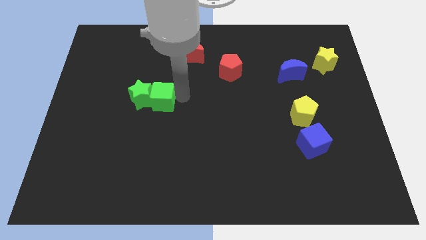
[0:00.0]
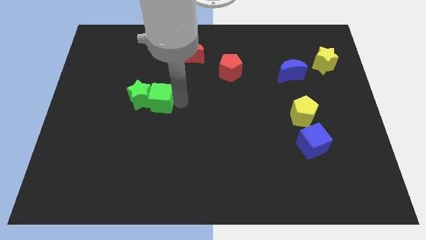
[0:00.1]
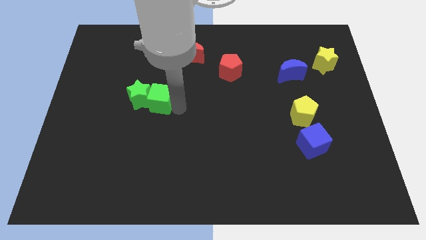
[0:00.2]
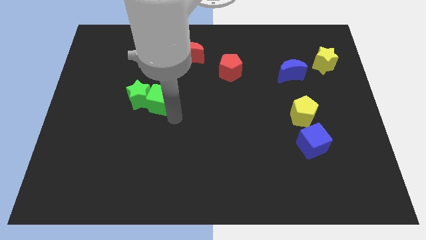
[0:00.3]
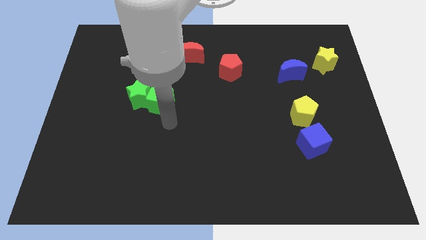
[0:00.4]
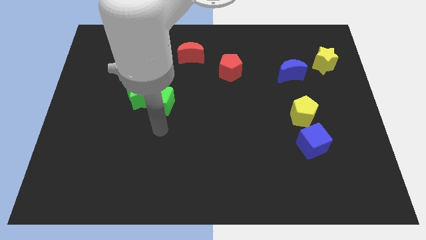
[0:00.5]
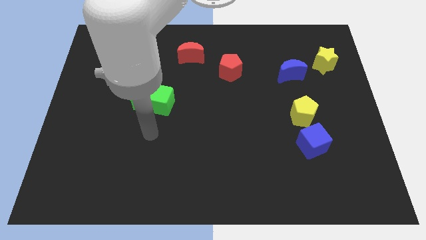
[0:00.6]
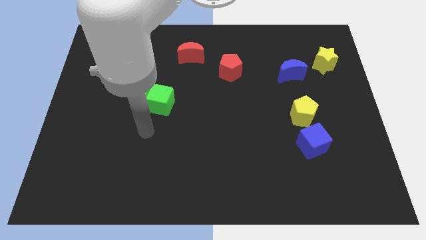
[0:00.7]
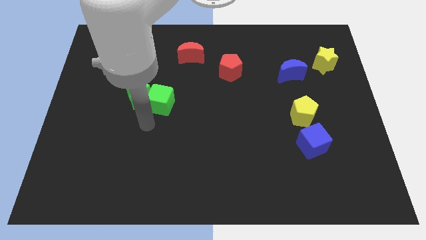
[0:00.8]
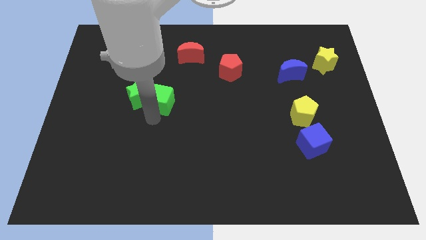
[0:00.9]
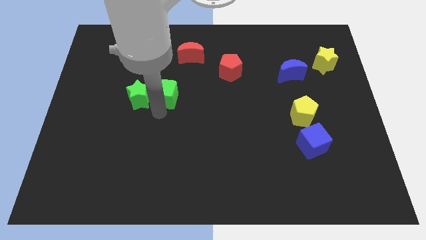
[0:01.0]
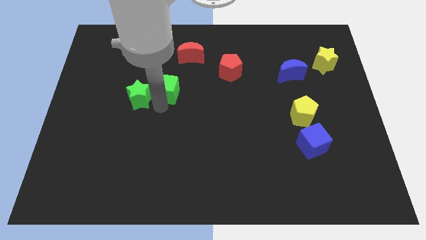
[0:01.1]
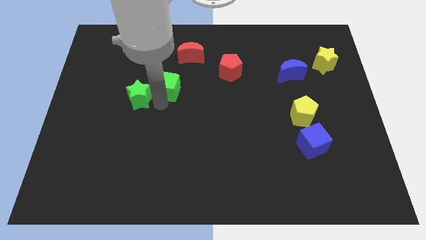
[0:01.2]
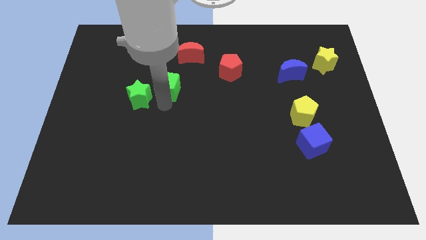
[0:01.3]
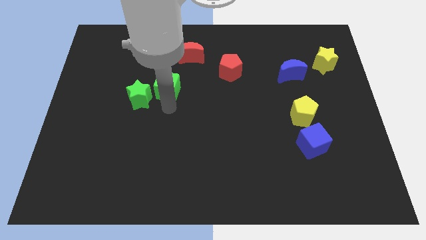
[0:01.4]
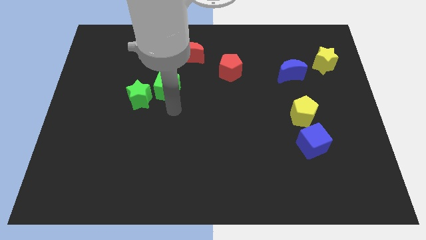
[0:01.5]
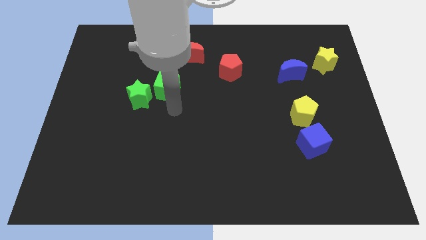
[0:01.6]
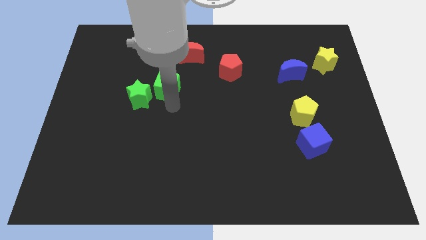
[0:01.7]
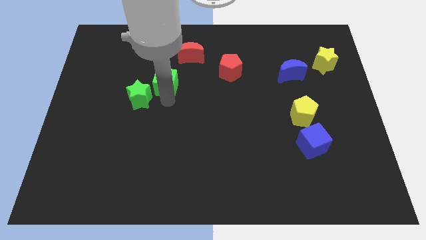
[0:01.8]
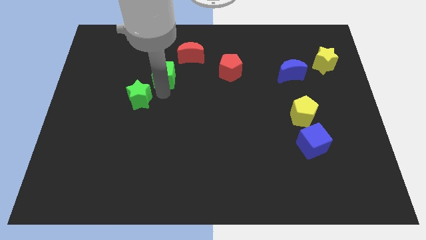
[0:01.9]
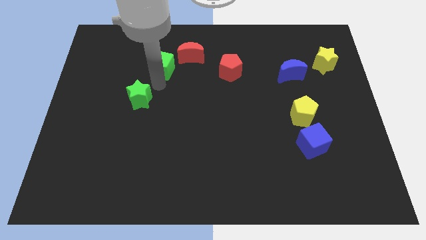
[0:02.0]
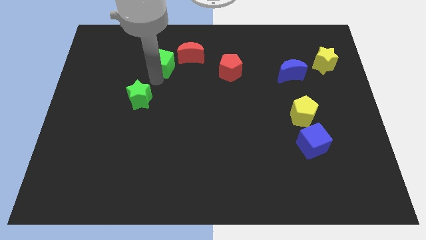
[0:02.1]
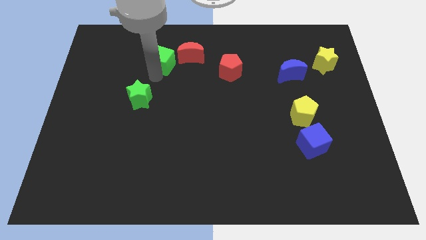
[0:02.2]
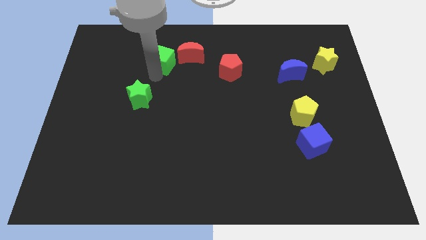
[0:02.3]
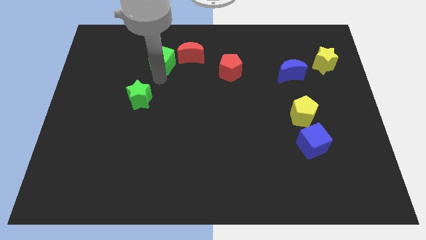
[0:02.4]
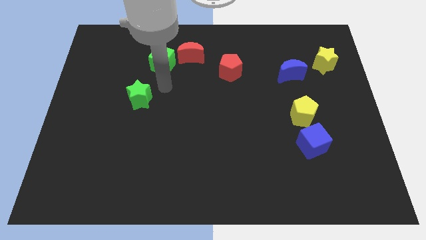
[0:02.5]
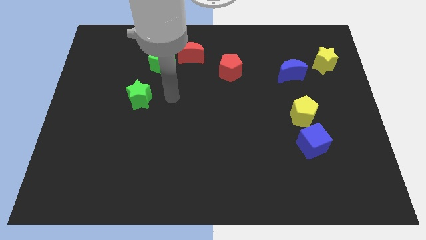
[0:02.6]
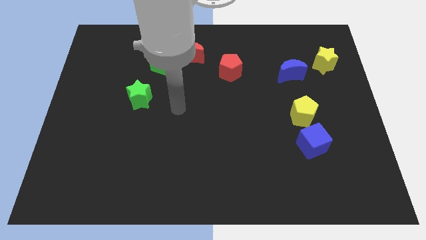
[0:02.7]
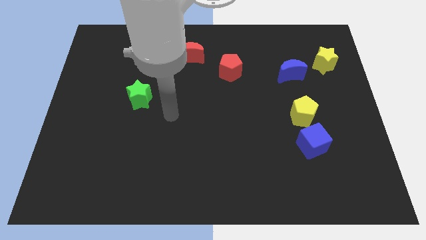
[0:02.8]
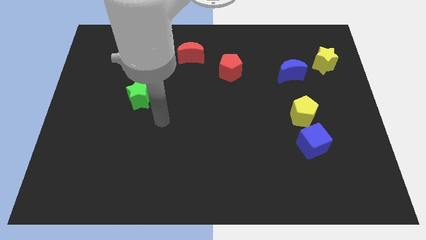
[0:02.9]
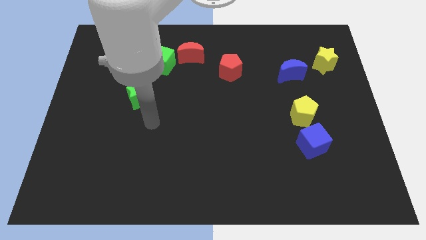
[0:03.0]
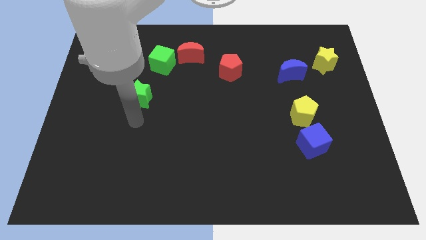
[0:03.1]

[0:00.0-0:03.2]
move green cube to the left of red moon

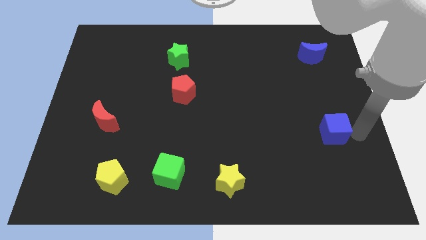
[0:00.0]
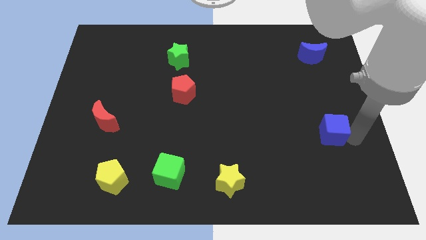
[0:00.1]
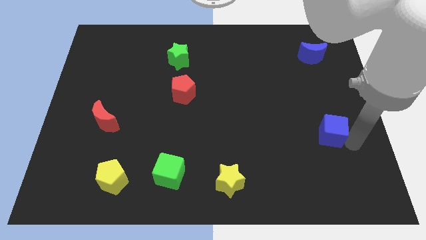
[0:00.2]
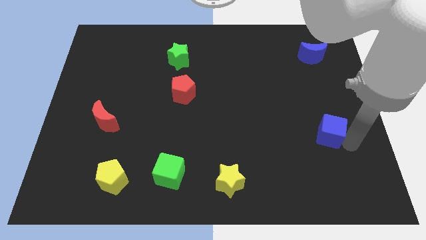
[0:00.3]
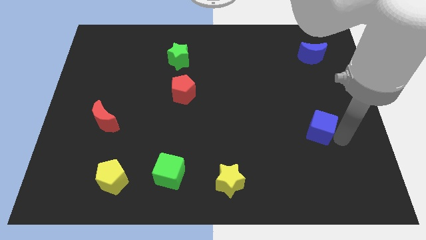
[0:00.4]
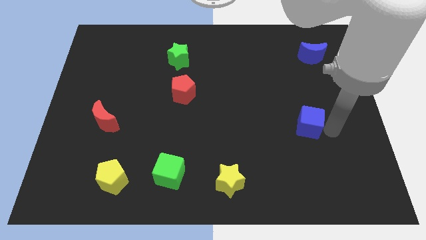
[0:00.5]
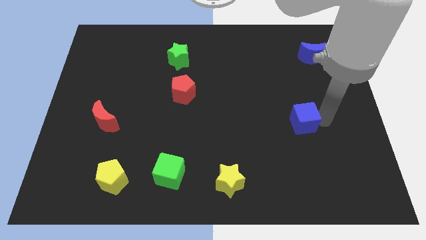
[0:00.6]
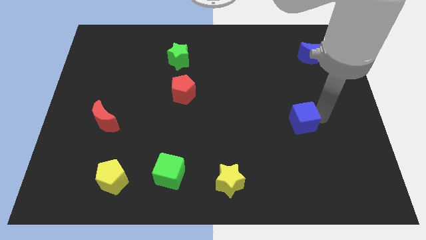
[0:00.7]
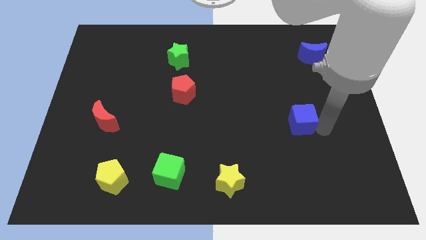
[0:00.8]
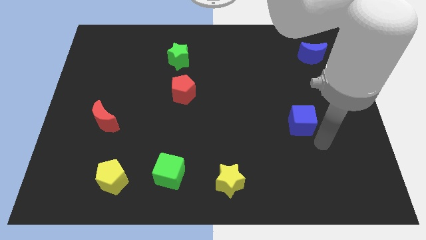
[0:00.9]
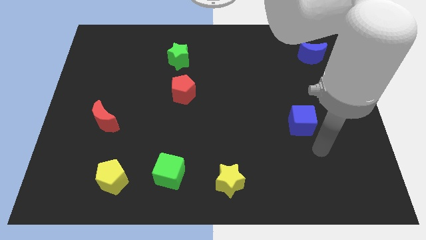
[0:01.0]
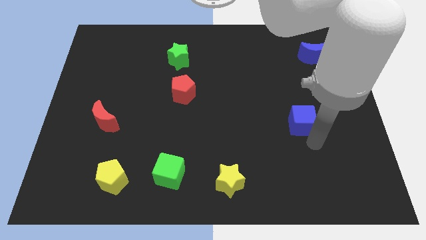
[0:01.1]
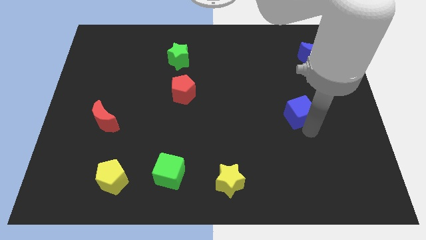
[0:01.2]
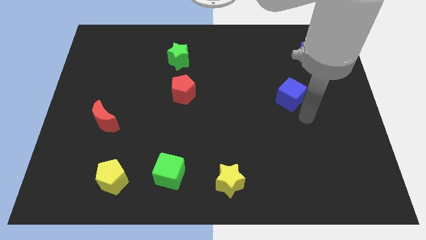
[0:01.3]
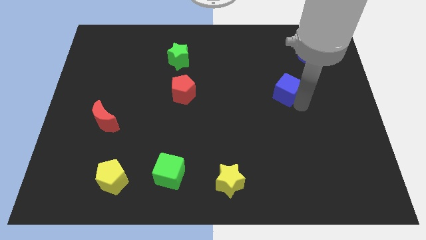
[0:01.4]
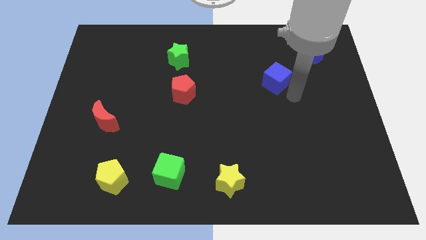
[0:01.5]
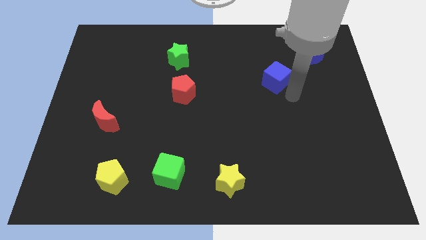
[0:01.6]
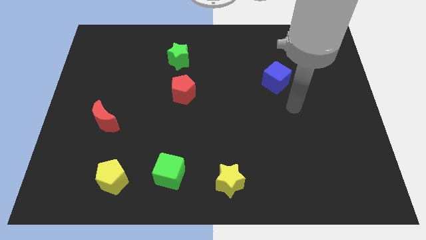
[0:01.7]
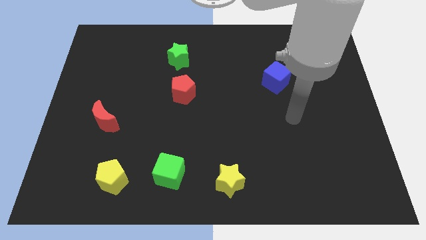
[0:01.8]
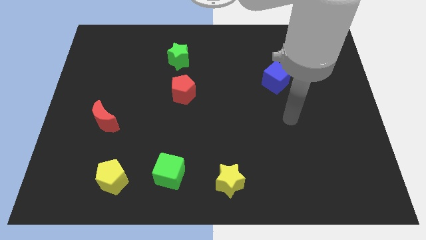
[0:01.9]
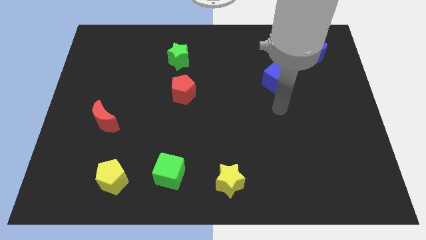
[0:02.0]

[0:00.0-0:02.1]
slide blue cube up diagonal to blue moon

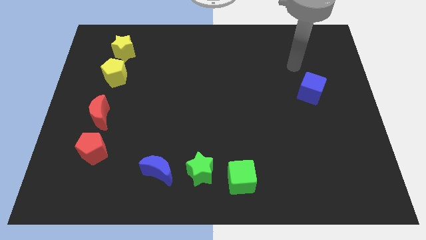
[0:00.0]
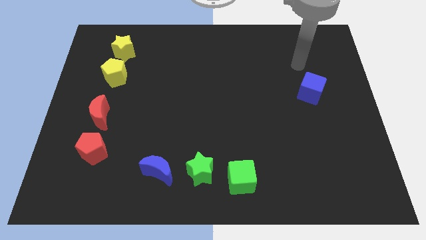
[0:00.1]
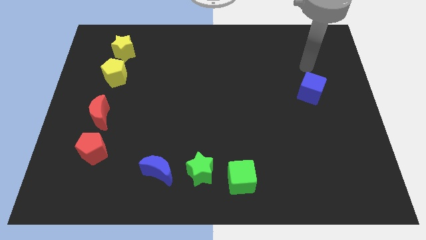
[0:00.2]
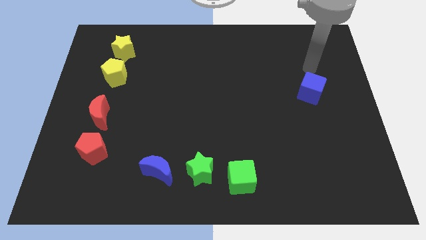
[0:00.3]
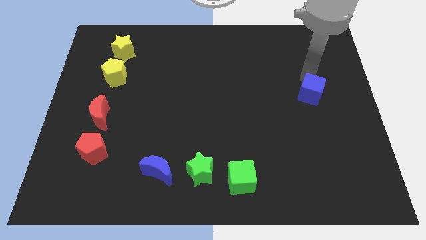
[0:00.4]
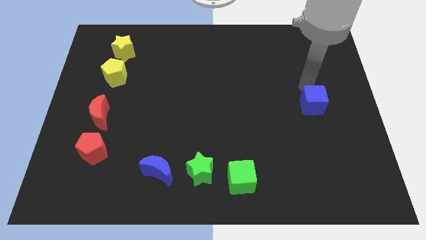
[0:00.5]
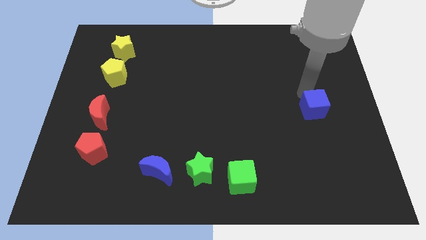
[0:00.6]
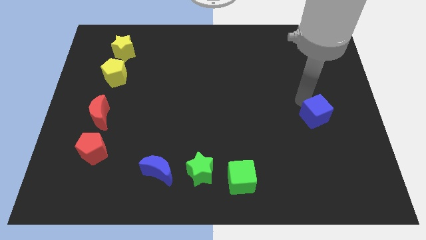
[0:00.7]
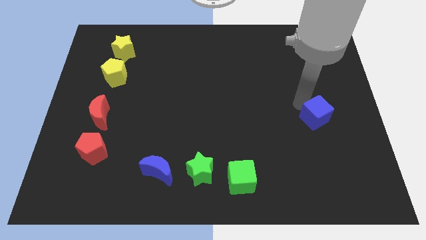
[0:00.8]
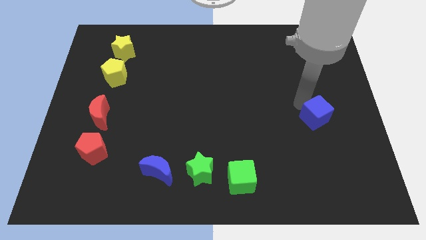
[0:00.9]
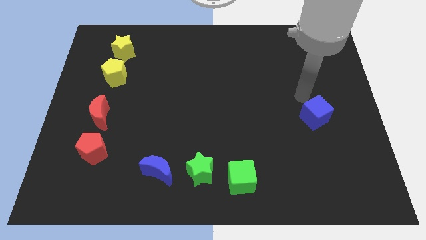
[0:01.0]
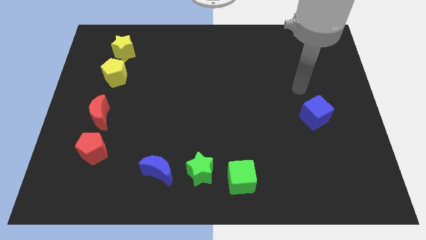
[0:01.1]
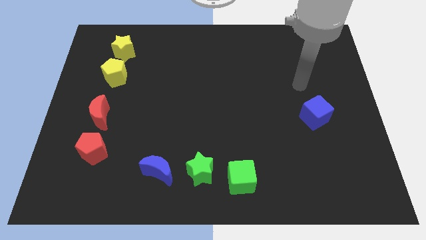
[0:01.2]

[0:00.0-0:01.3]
slightly push the blue cube downwards

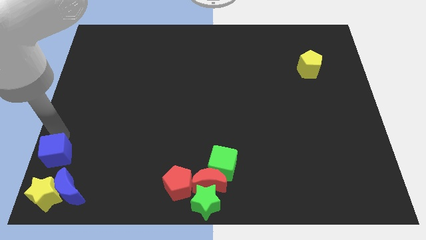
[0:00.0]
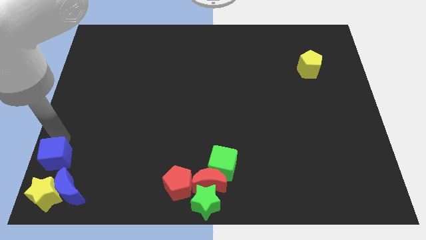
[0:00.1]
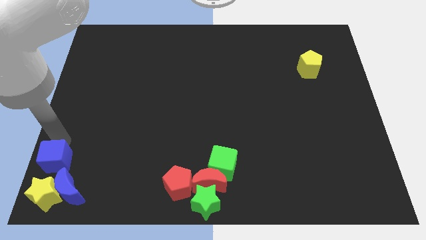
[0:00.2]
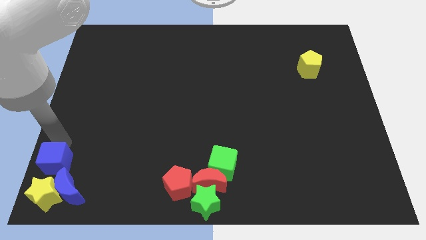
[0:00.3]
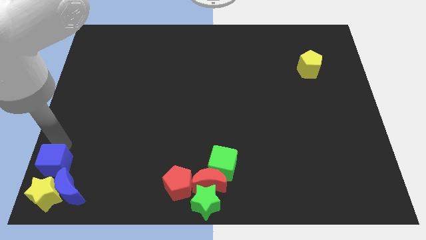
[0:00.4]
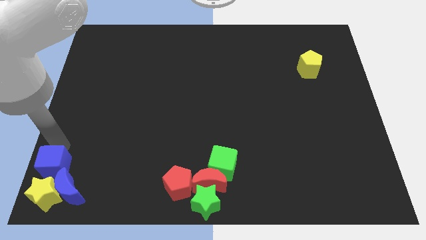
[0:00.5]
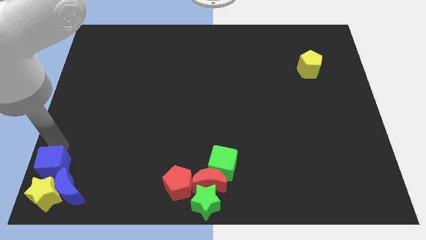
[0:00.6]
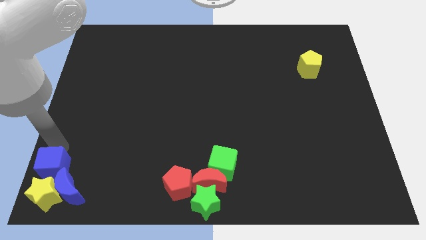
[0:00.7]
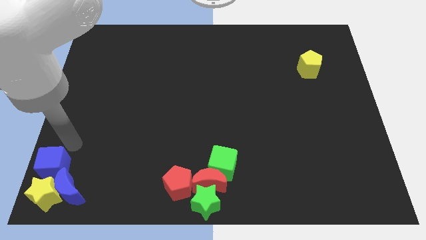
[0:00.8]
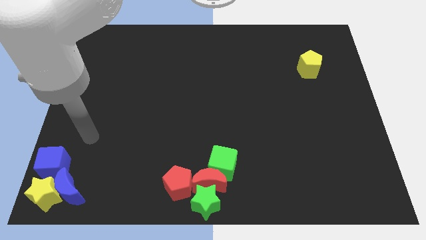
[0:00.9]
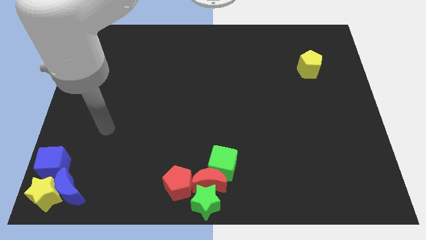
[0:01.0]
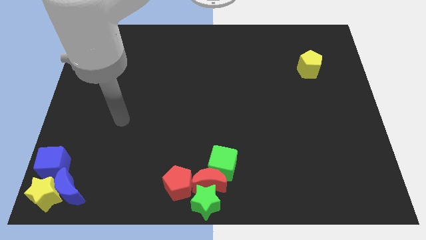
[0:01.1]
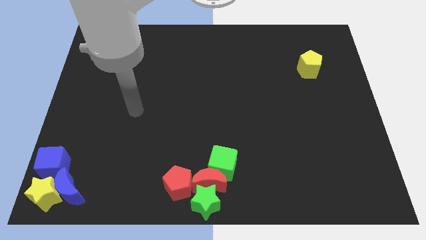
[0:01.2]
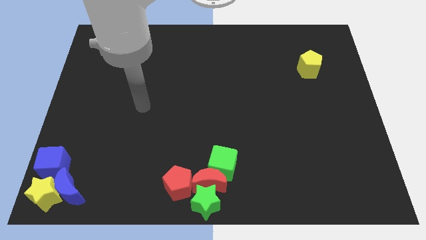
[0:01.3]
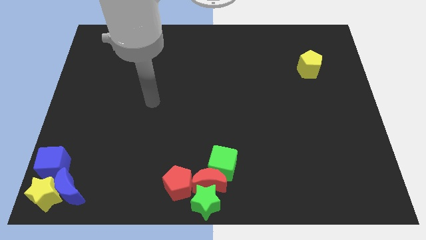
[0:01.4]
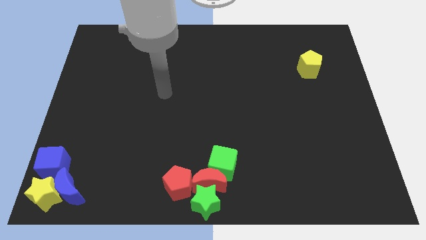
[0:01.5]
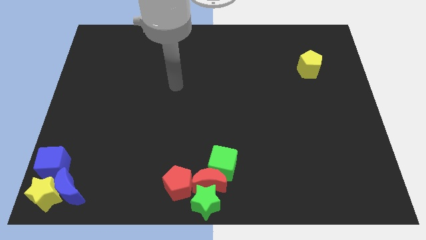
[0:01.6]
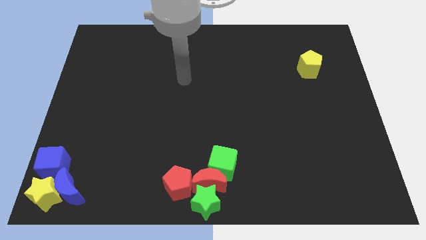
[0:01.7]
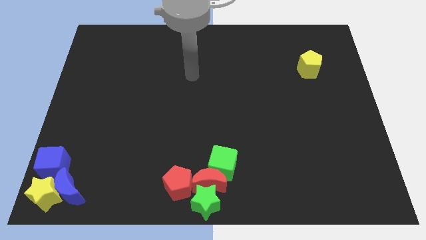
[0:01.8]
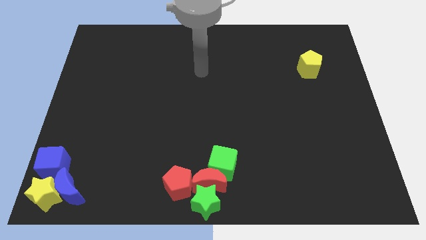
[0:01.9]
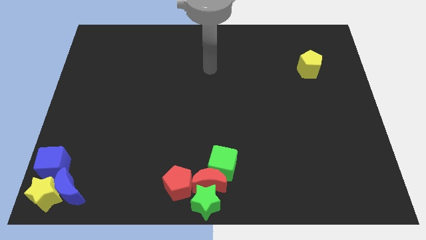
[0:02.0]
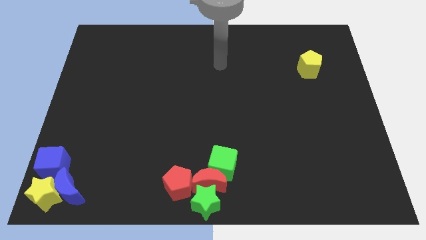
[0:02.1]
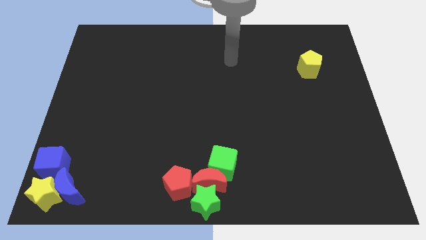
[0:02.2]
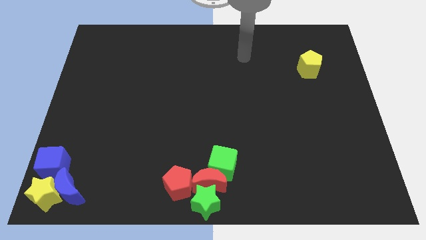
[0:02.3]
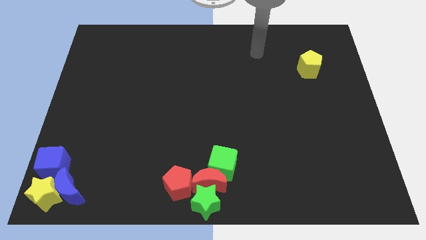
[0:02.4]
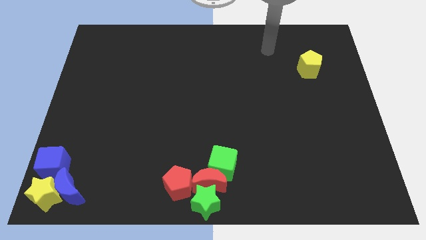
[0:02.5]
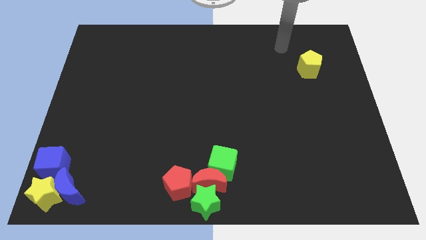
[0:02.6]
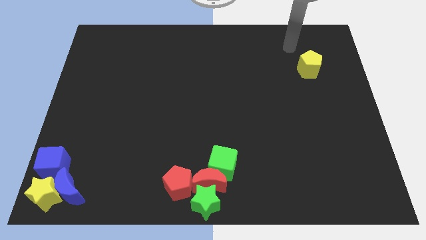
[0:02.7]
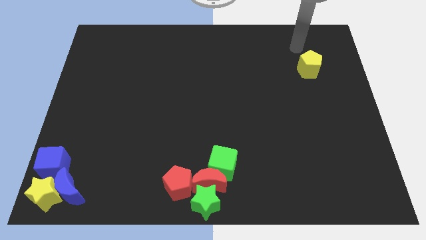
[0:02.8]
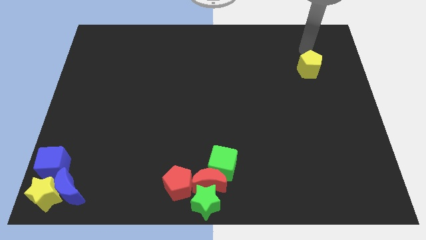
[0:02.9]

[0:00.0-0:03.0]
move your arm away from blue cube
